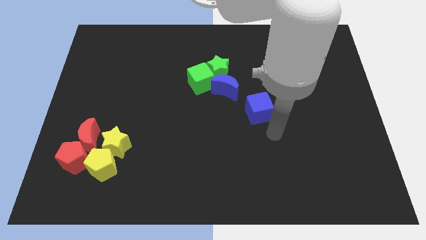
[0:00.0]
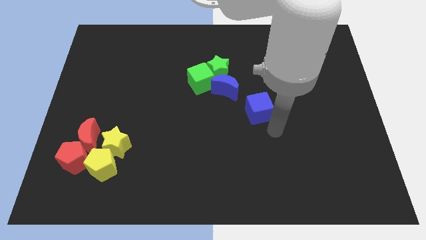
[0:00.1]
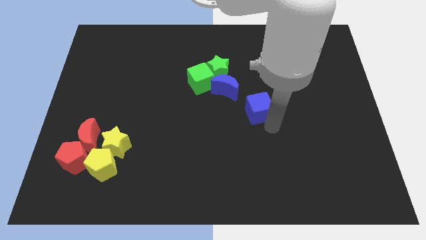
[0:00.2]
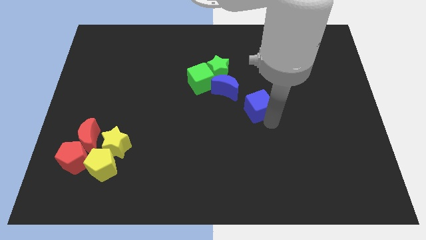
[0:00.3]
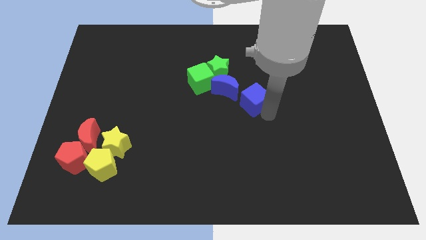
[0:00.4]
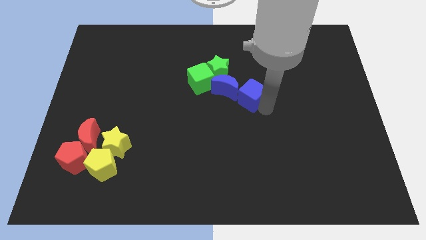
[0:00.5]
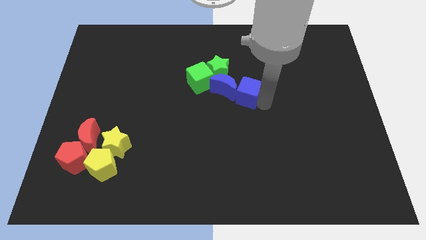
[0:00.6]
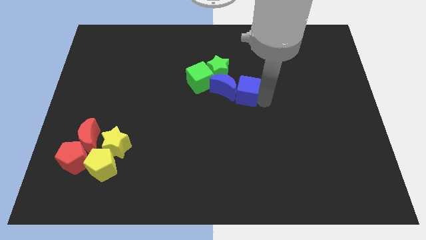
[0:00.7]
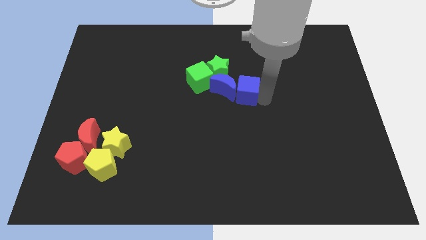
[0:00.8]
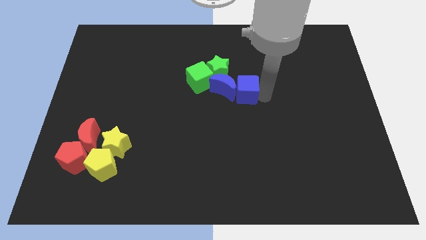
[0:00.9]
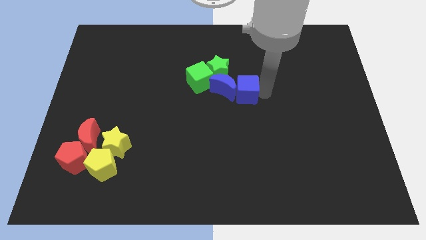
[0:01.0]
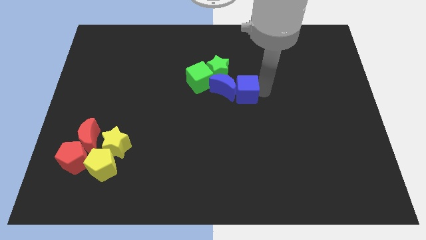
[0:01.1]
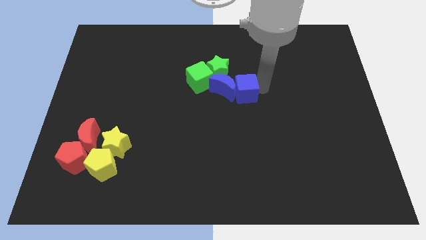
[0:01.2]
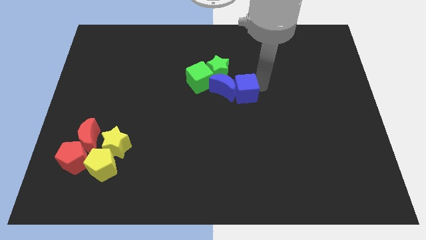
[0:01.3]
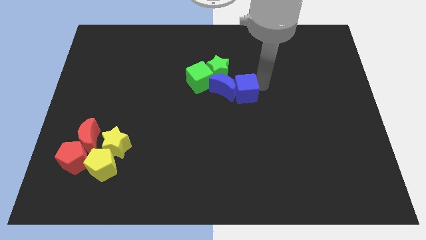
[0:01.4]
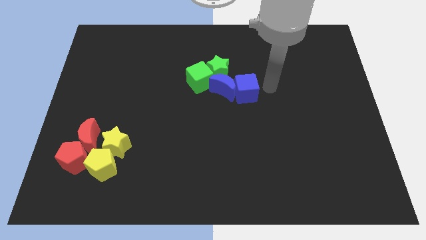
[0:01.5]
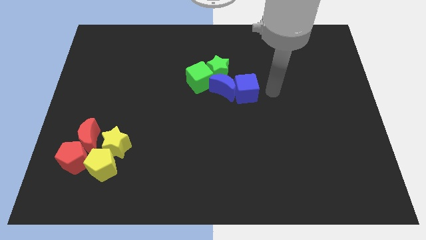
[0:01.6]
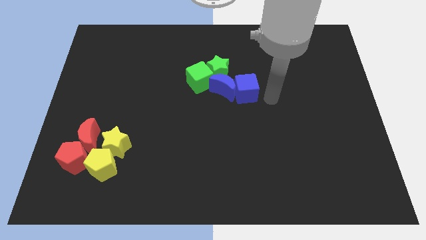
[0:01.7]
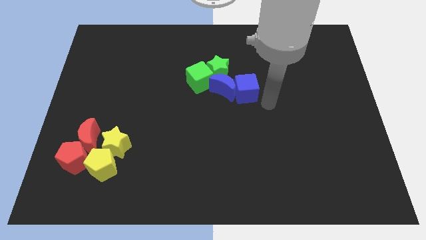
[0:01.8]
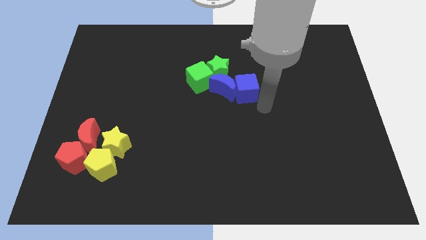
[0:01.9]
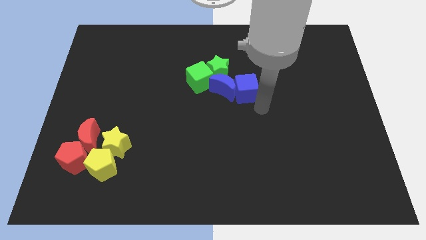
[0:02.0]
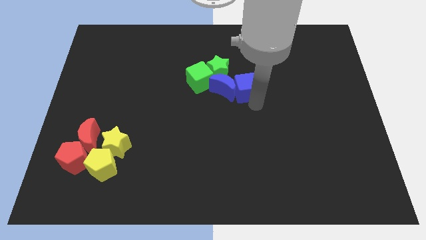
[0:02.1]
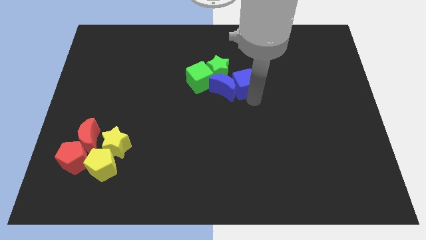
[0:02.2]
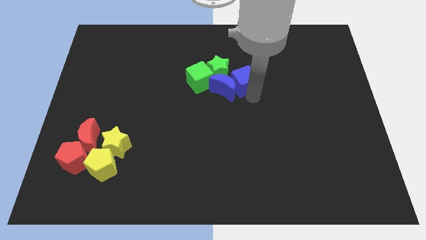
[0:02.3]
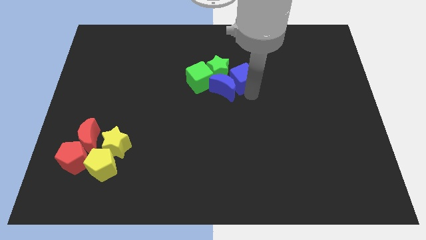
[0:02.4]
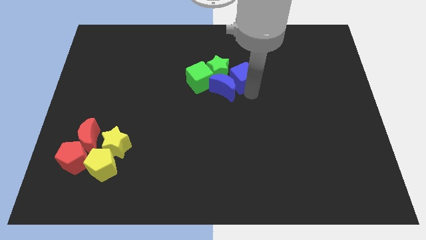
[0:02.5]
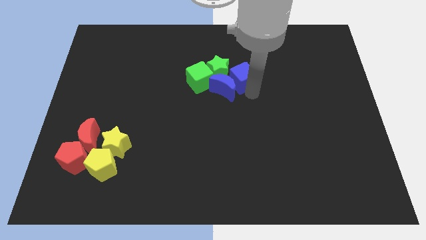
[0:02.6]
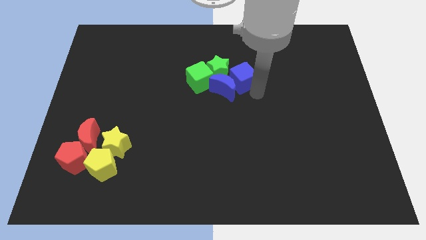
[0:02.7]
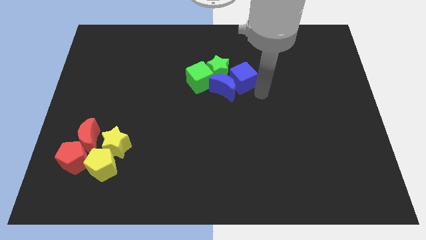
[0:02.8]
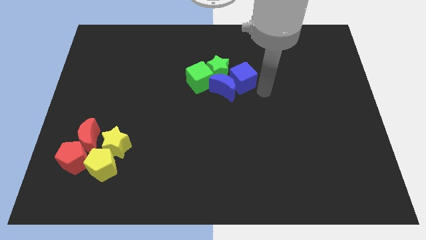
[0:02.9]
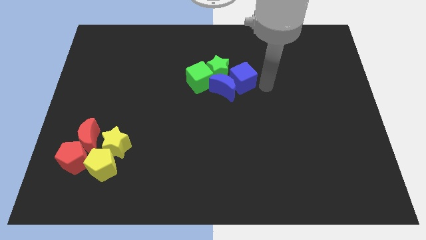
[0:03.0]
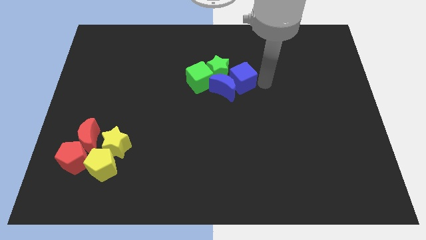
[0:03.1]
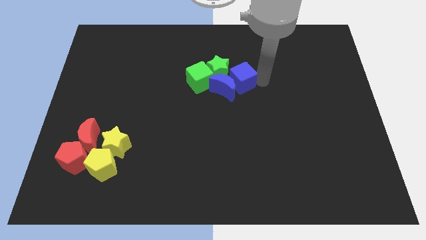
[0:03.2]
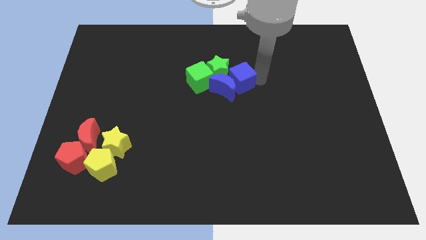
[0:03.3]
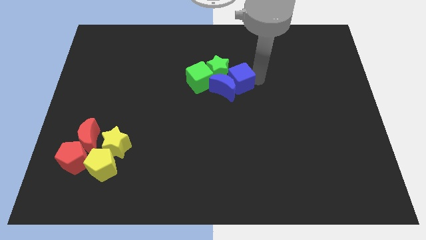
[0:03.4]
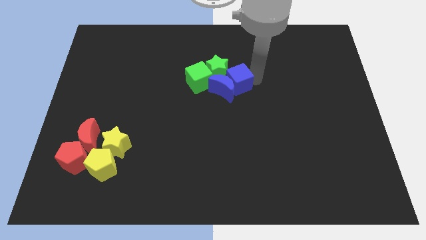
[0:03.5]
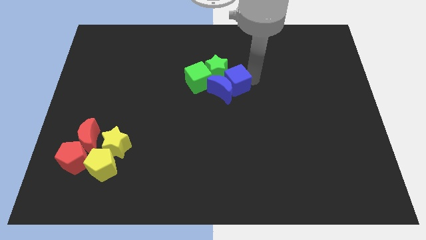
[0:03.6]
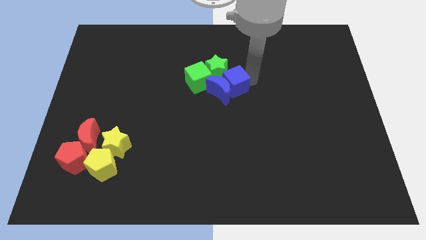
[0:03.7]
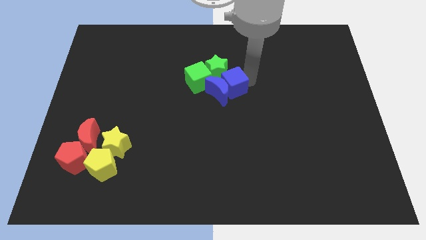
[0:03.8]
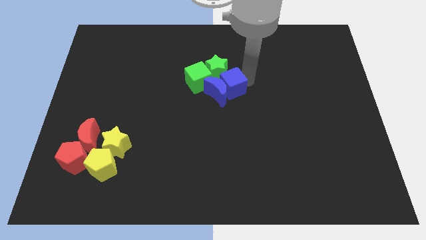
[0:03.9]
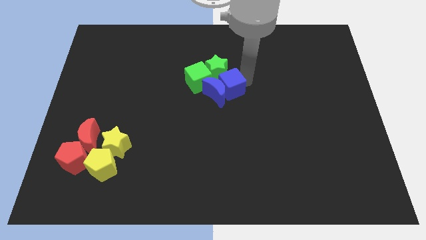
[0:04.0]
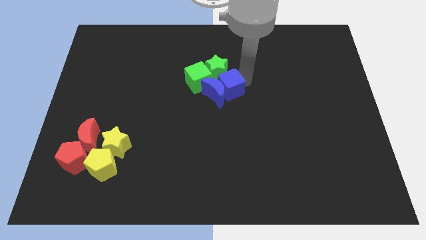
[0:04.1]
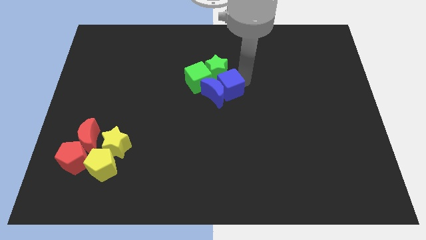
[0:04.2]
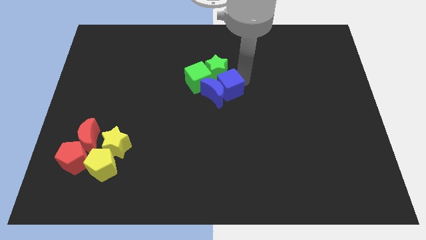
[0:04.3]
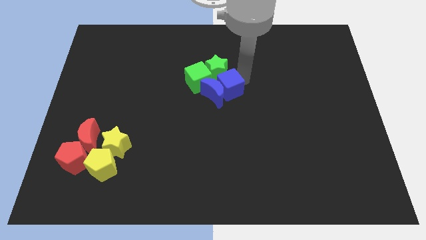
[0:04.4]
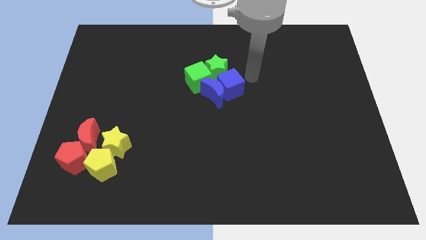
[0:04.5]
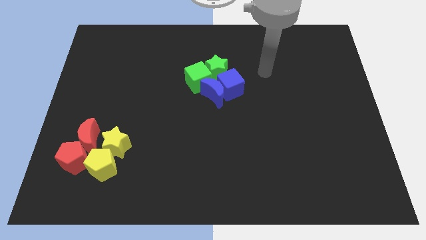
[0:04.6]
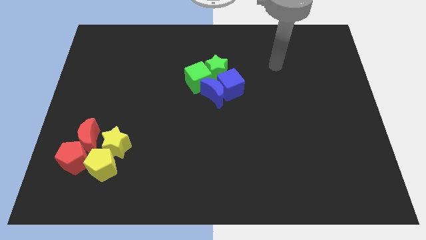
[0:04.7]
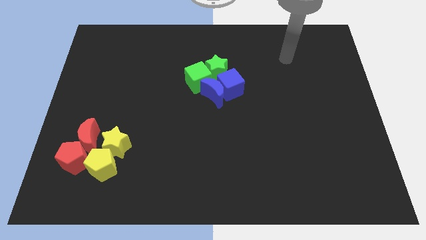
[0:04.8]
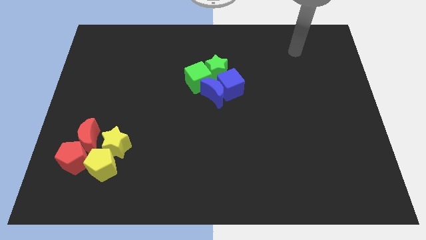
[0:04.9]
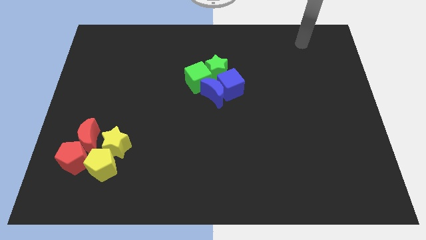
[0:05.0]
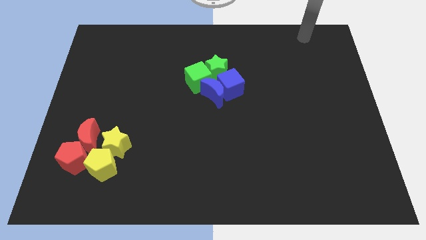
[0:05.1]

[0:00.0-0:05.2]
move blue cube to the bottom right of green star

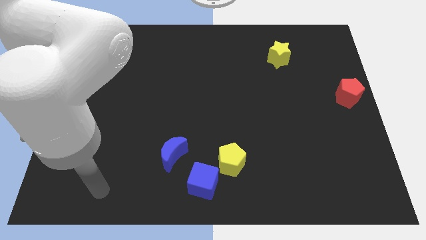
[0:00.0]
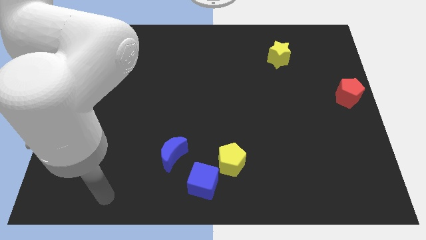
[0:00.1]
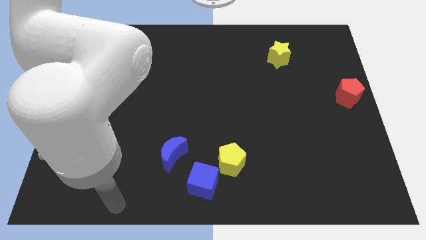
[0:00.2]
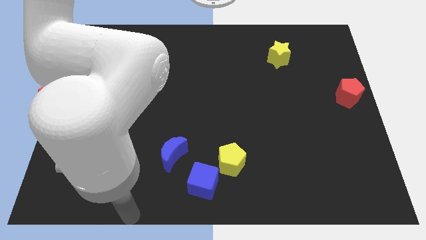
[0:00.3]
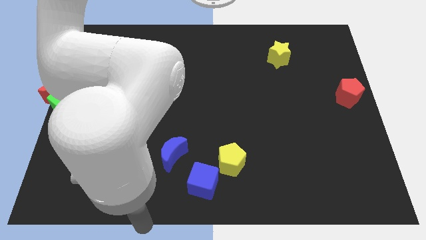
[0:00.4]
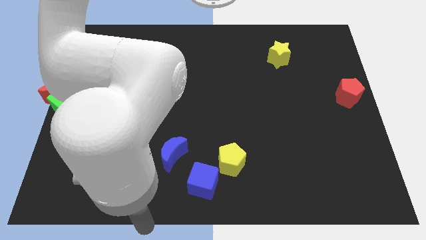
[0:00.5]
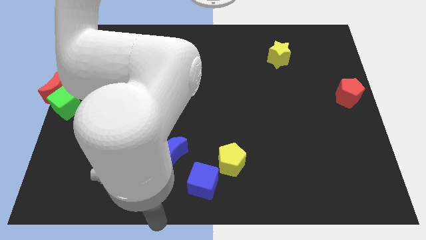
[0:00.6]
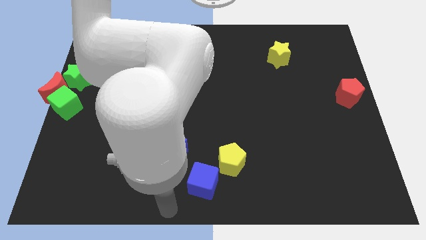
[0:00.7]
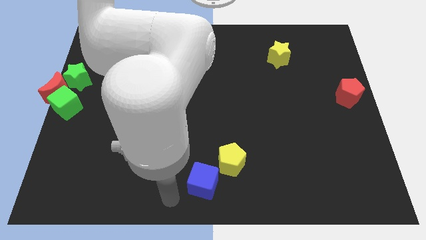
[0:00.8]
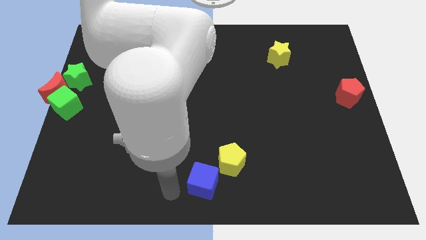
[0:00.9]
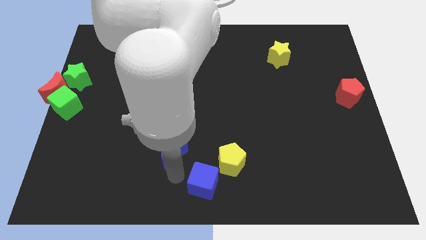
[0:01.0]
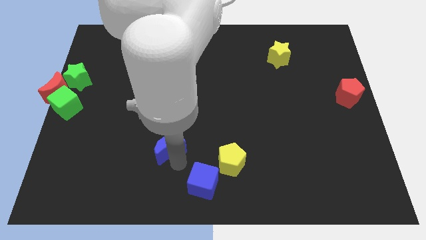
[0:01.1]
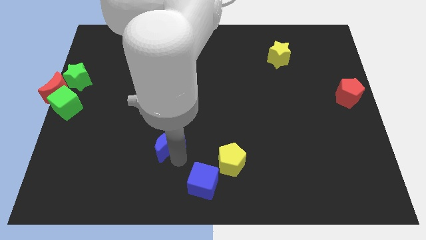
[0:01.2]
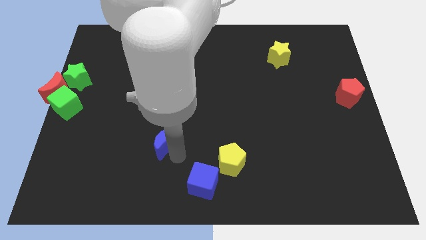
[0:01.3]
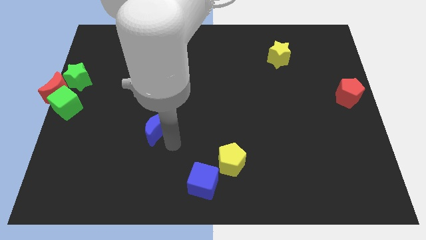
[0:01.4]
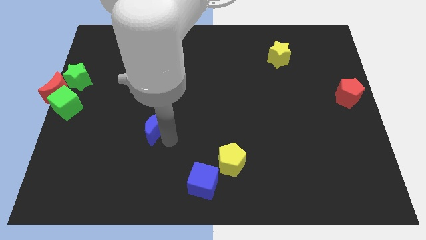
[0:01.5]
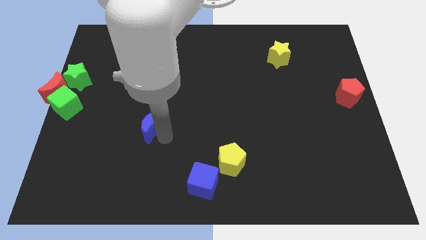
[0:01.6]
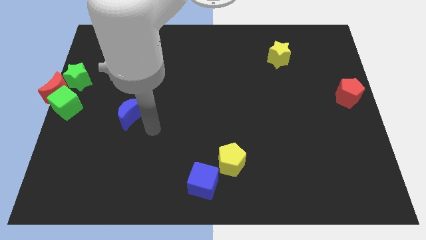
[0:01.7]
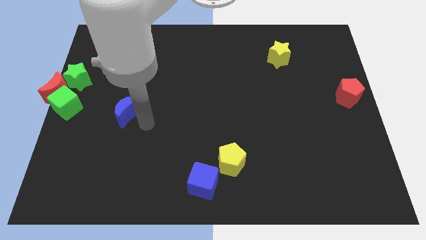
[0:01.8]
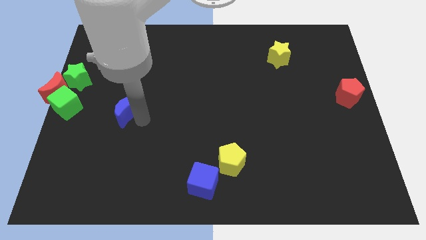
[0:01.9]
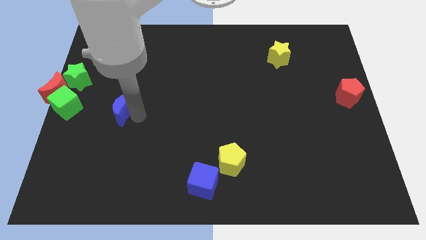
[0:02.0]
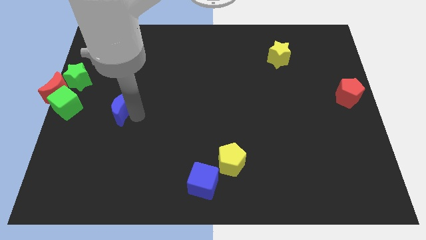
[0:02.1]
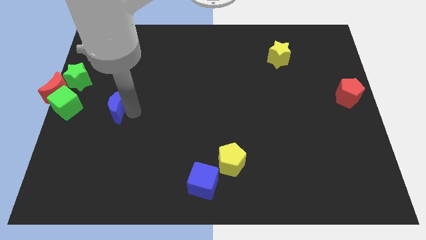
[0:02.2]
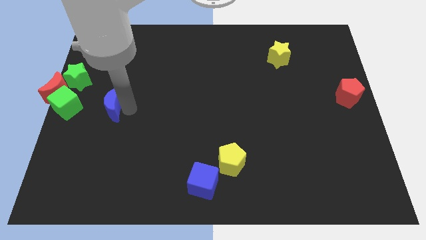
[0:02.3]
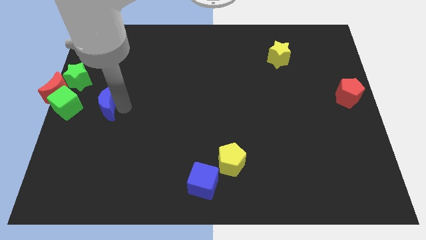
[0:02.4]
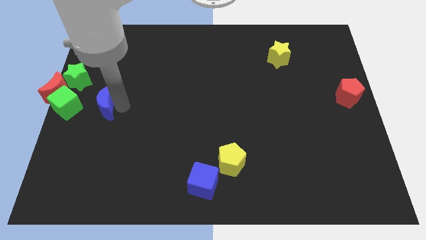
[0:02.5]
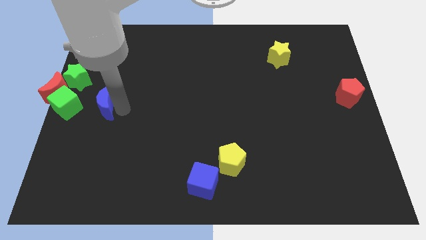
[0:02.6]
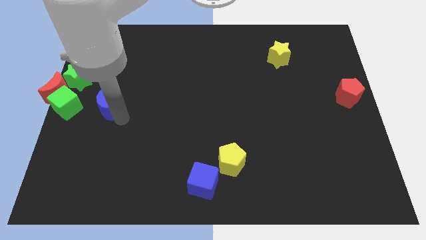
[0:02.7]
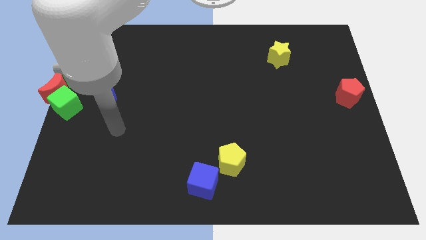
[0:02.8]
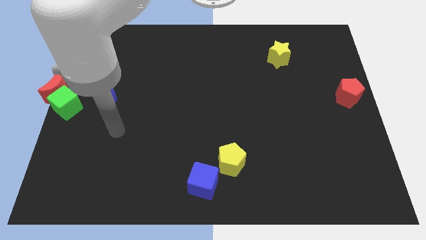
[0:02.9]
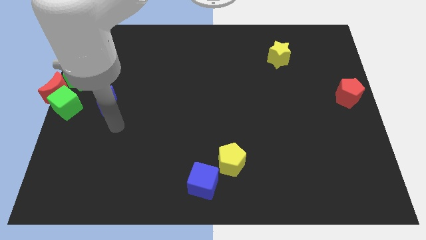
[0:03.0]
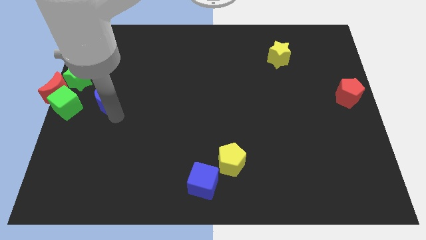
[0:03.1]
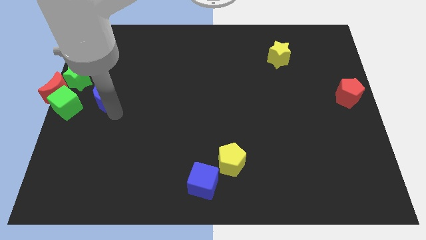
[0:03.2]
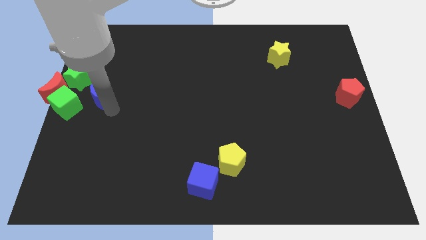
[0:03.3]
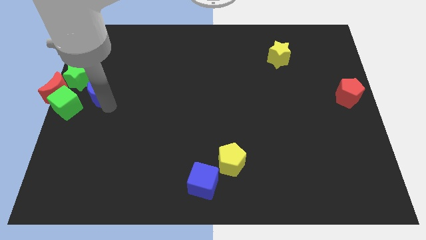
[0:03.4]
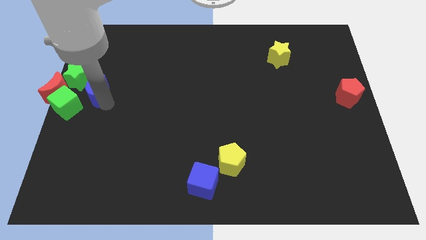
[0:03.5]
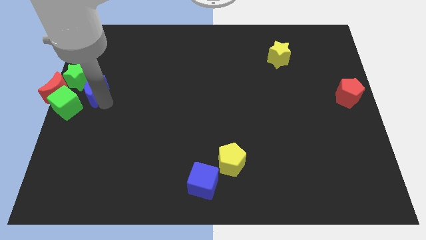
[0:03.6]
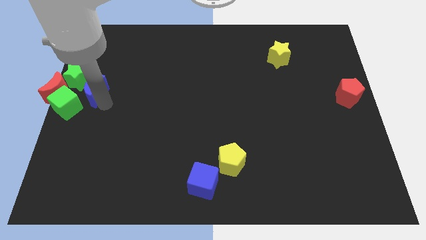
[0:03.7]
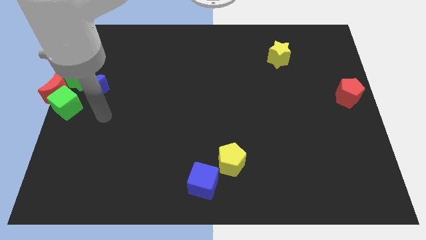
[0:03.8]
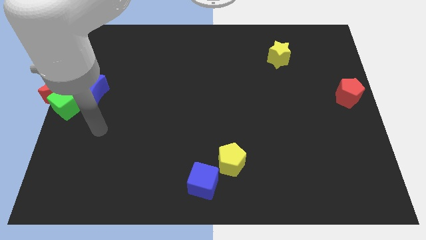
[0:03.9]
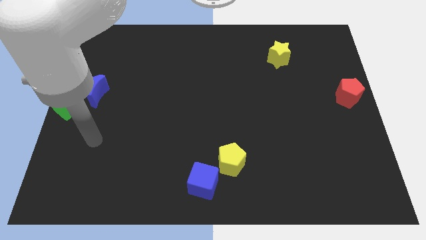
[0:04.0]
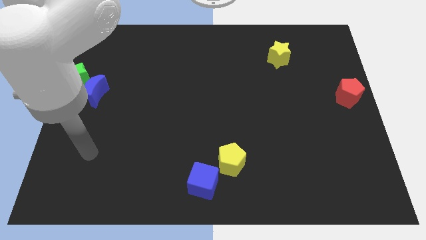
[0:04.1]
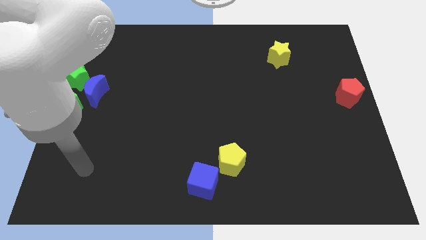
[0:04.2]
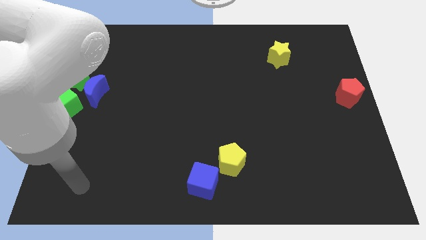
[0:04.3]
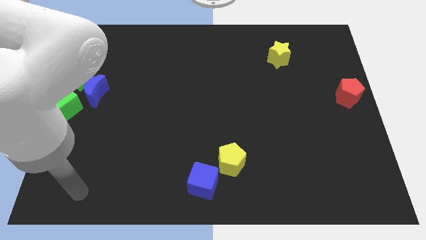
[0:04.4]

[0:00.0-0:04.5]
move the blue moon between the green cube and the green star
